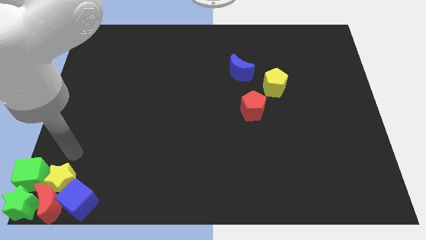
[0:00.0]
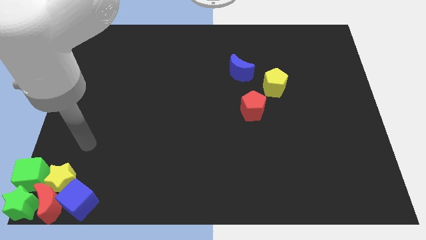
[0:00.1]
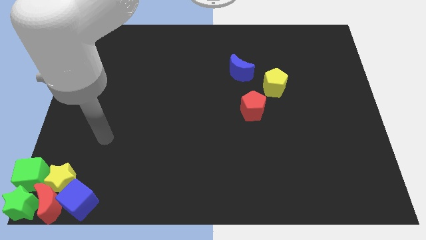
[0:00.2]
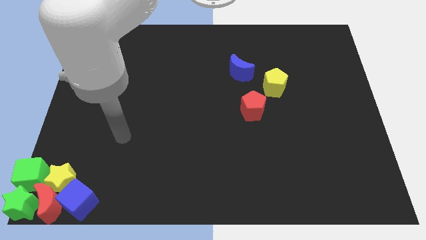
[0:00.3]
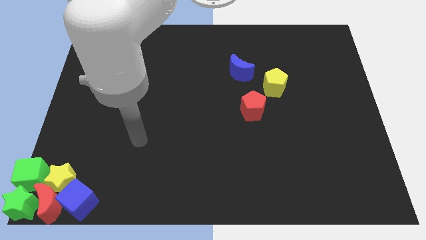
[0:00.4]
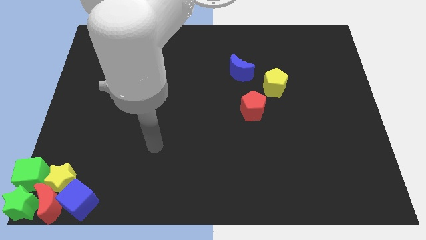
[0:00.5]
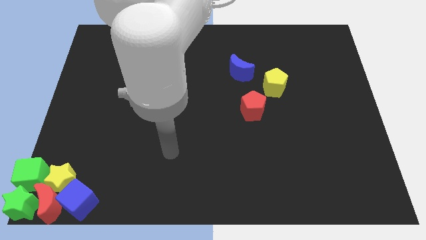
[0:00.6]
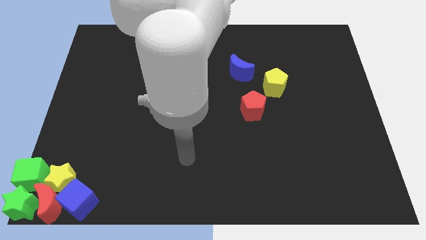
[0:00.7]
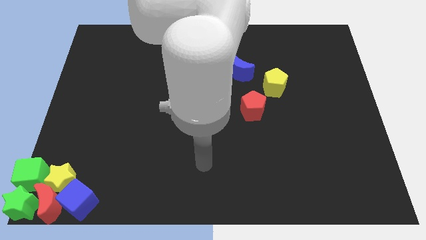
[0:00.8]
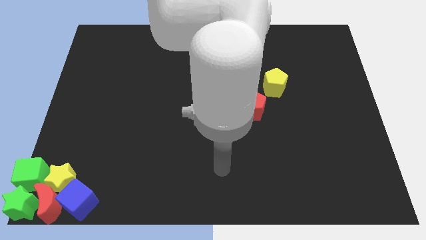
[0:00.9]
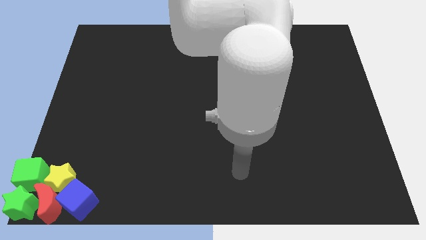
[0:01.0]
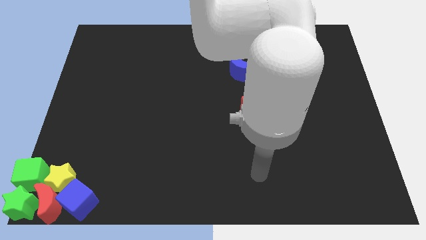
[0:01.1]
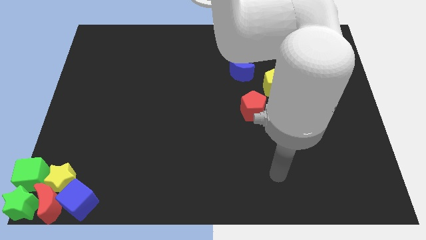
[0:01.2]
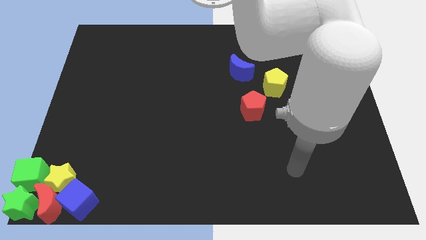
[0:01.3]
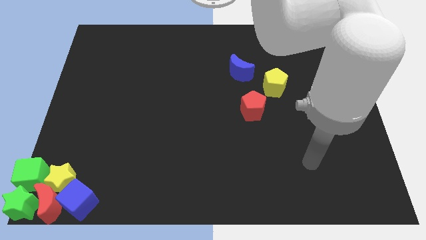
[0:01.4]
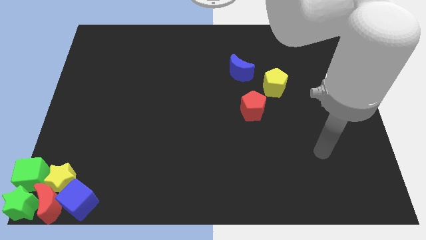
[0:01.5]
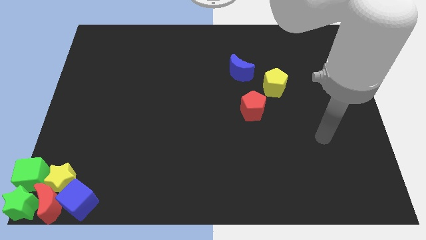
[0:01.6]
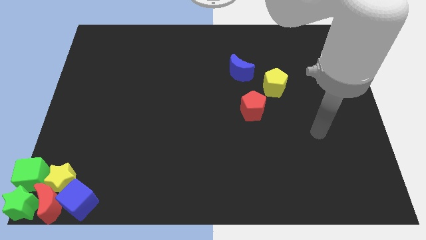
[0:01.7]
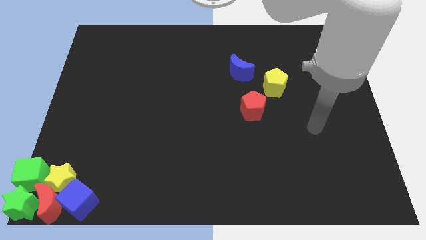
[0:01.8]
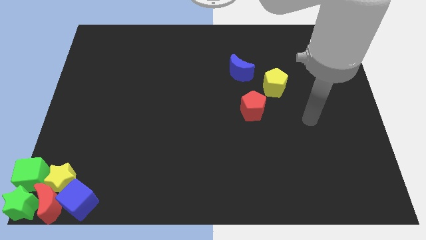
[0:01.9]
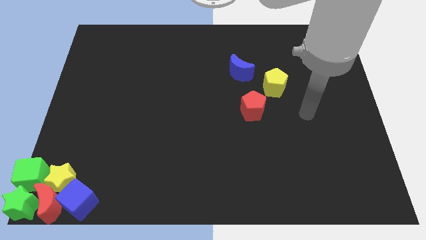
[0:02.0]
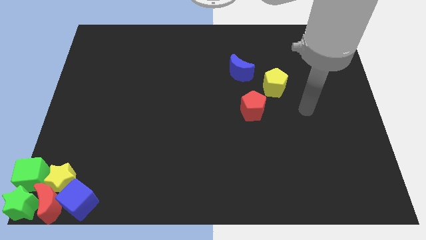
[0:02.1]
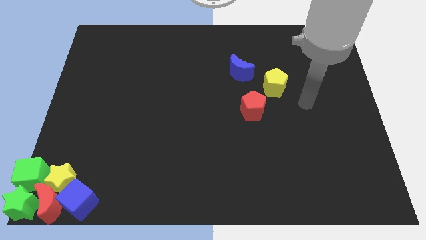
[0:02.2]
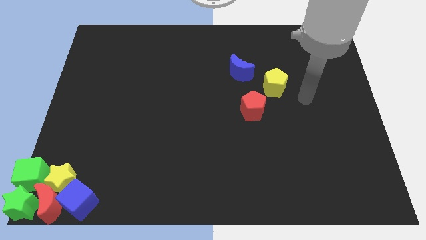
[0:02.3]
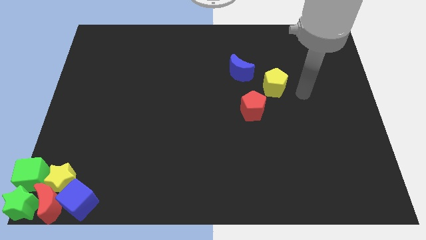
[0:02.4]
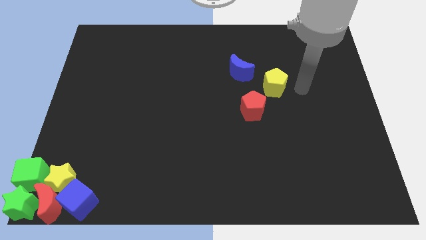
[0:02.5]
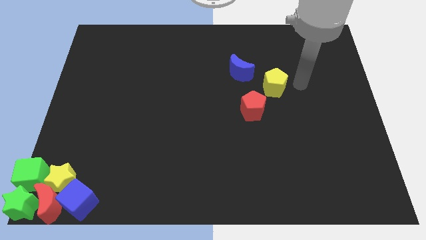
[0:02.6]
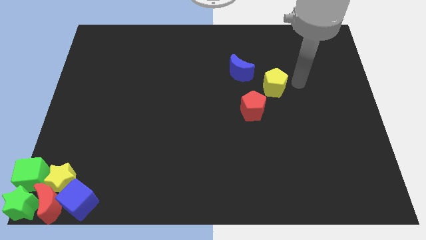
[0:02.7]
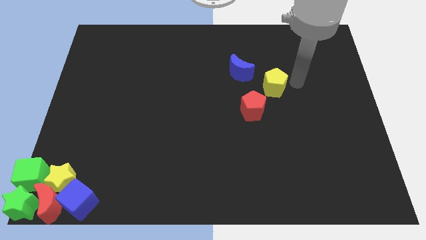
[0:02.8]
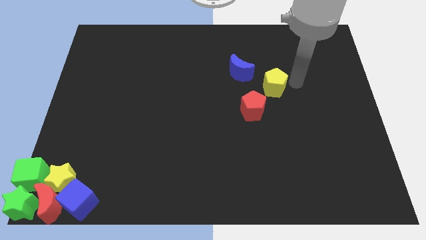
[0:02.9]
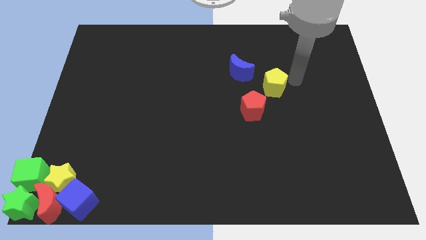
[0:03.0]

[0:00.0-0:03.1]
point your arm at the right of the yellow pentagon

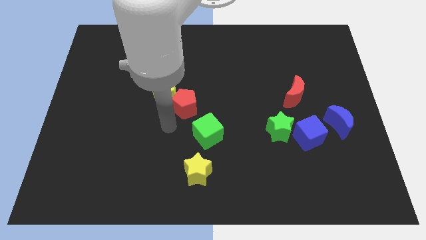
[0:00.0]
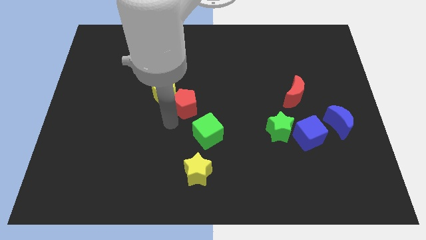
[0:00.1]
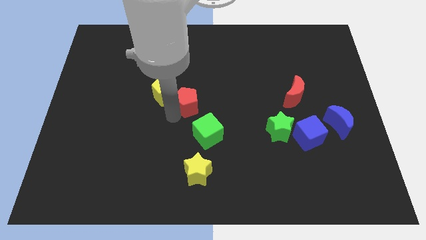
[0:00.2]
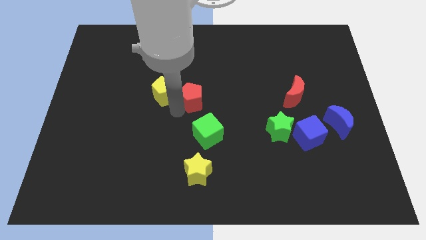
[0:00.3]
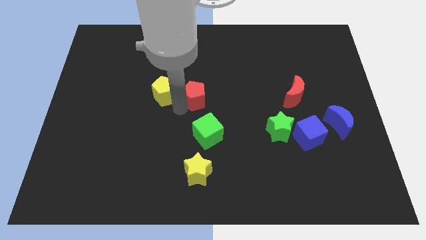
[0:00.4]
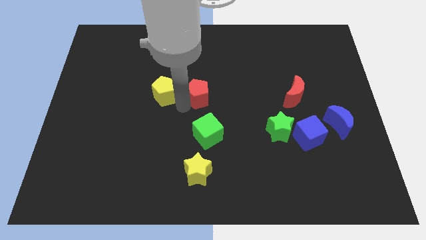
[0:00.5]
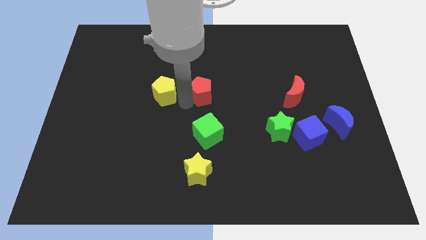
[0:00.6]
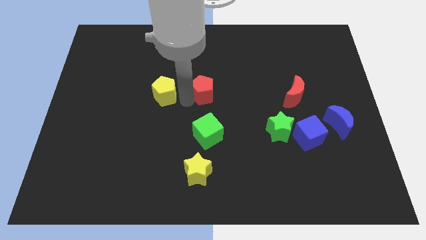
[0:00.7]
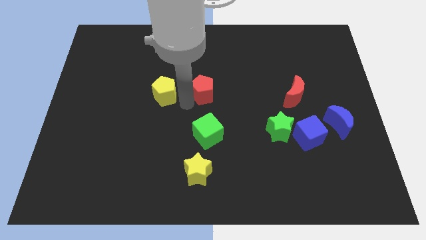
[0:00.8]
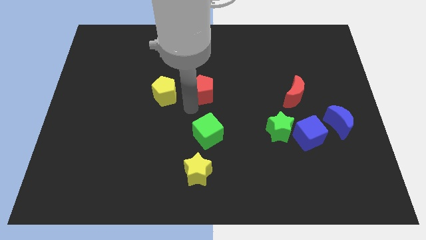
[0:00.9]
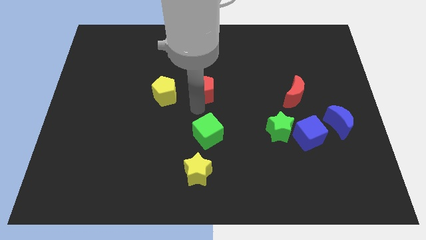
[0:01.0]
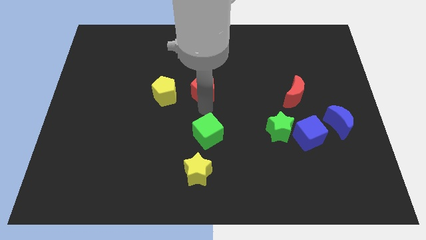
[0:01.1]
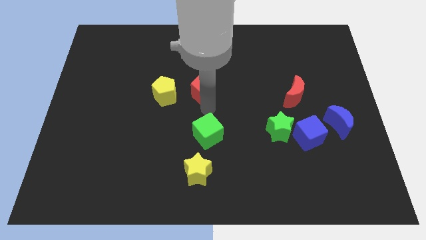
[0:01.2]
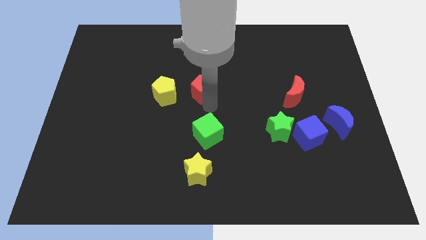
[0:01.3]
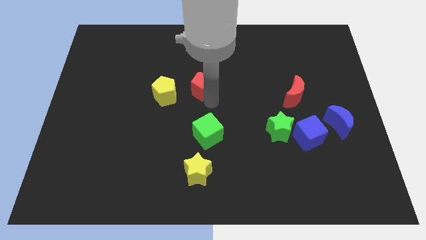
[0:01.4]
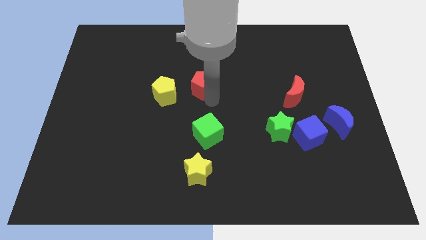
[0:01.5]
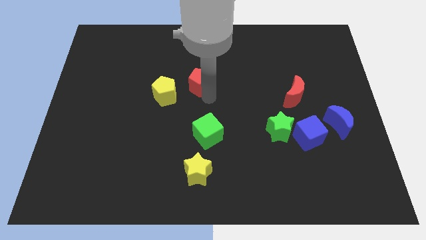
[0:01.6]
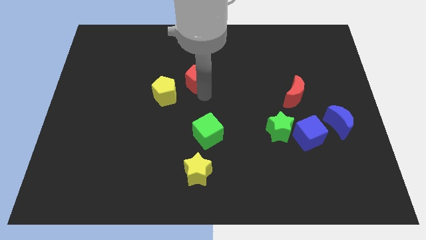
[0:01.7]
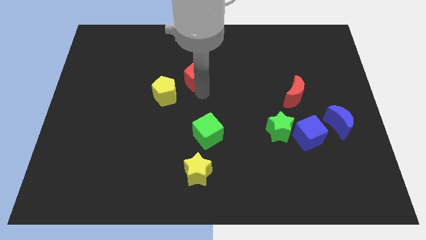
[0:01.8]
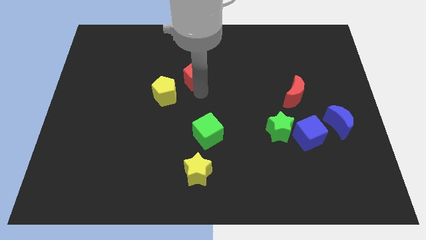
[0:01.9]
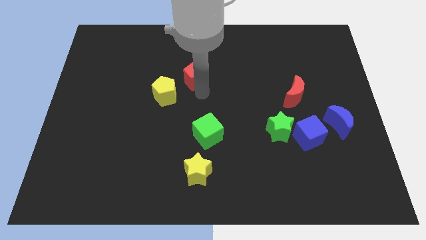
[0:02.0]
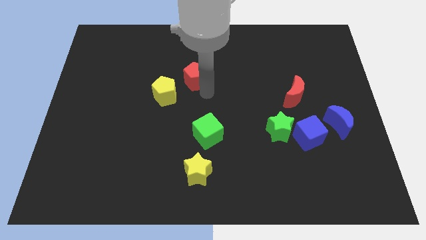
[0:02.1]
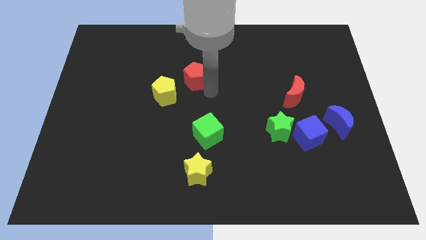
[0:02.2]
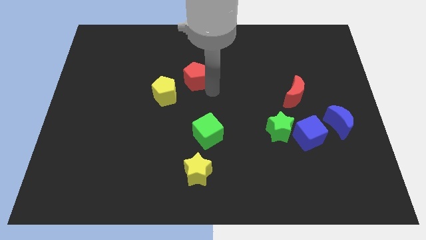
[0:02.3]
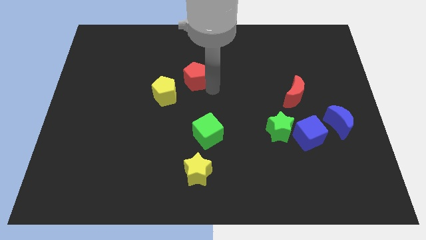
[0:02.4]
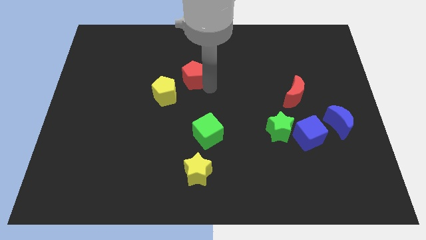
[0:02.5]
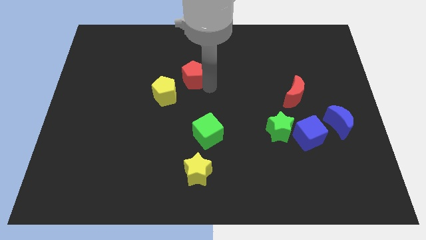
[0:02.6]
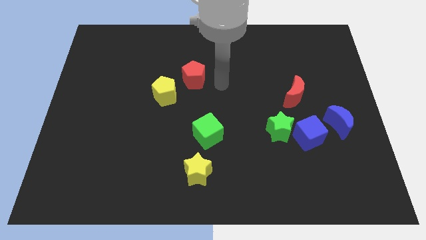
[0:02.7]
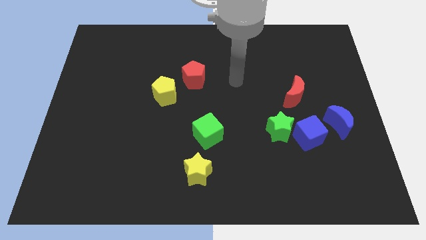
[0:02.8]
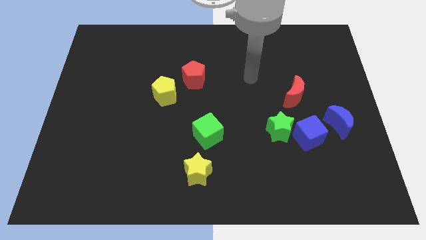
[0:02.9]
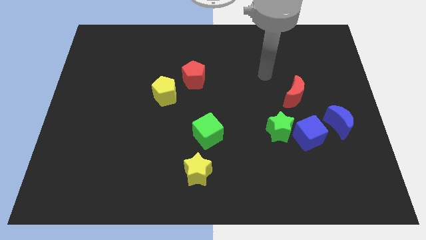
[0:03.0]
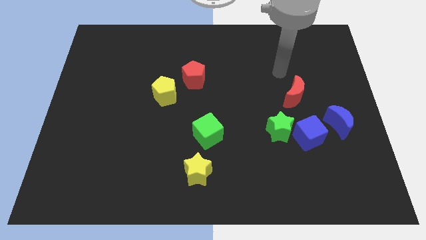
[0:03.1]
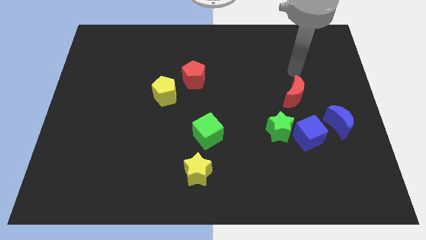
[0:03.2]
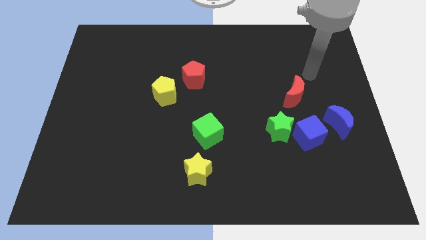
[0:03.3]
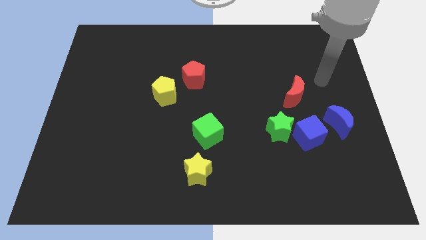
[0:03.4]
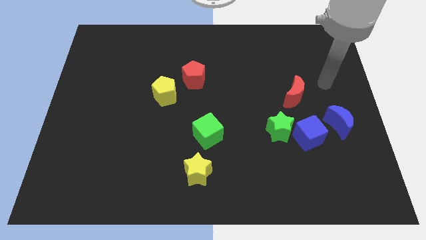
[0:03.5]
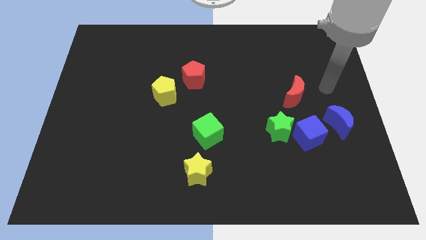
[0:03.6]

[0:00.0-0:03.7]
push red pentagon to the diagonal top right of yellow pentagon

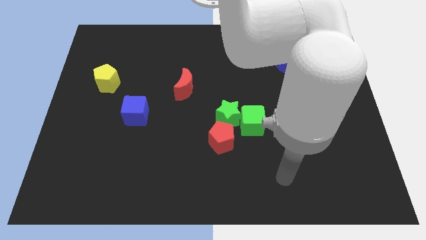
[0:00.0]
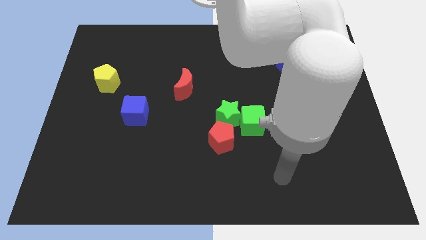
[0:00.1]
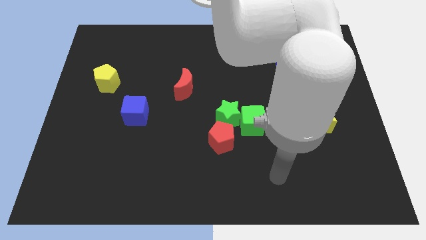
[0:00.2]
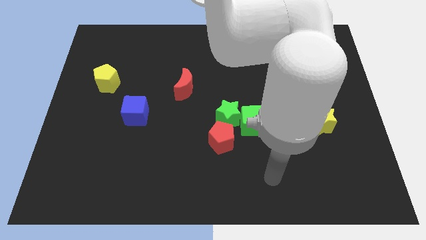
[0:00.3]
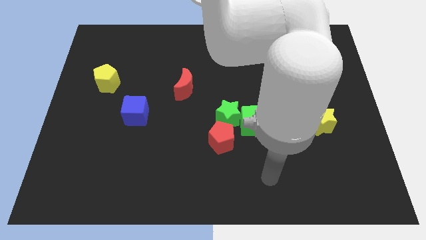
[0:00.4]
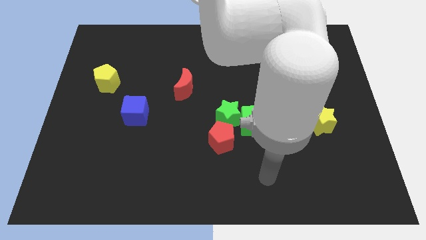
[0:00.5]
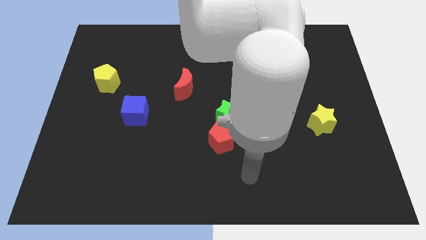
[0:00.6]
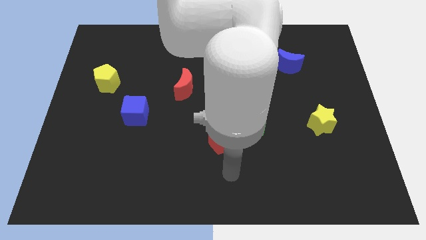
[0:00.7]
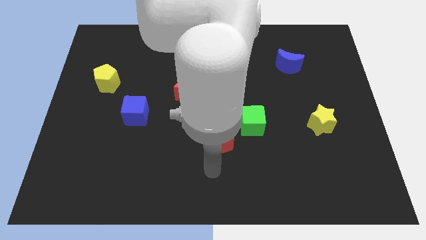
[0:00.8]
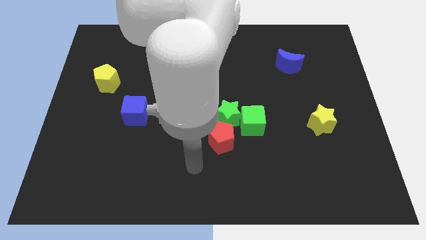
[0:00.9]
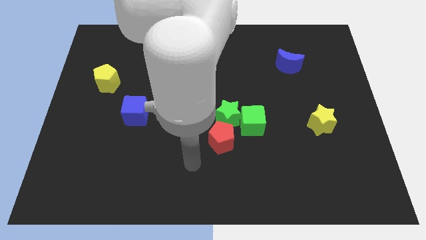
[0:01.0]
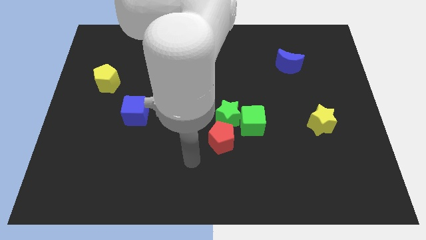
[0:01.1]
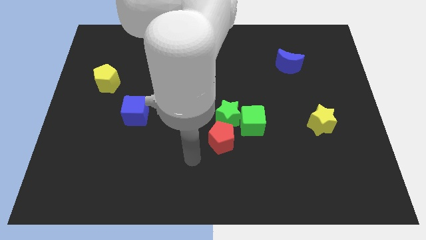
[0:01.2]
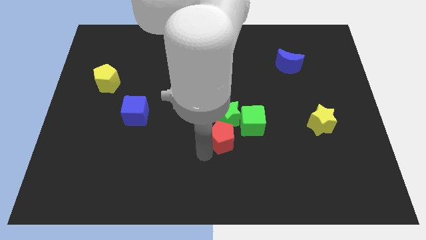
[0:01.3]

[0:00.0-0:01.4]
move your arm to the bottom left of red pentagon

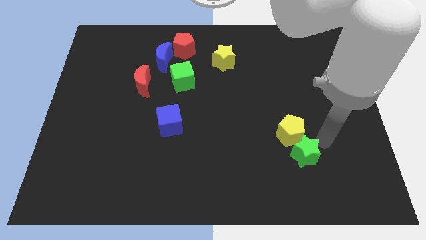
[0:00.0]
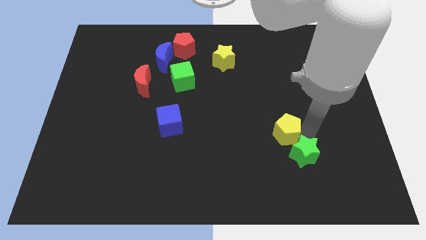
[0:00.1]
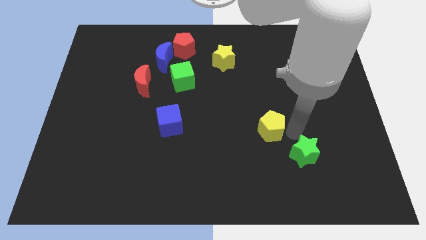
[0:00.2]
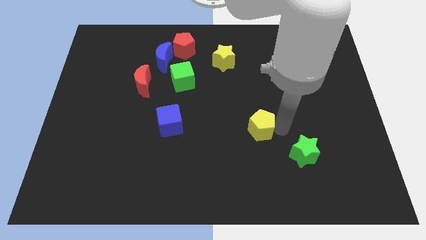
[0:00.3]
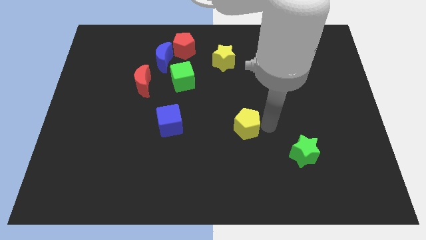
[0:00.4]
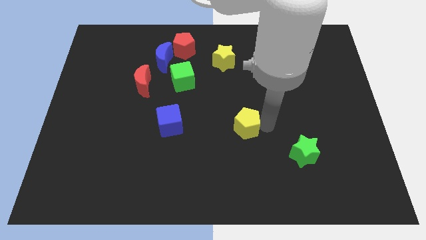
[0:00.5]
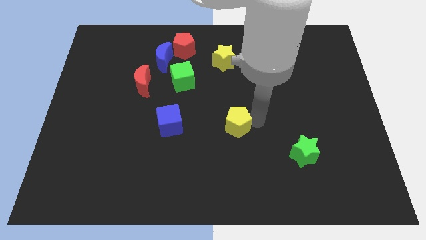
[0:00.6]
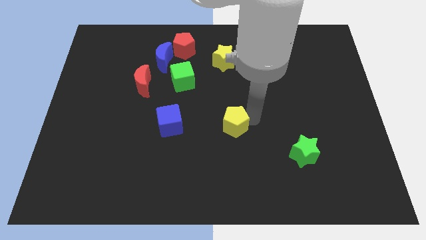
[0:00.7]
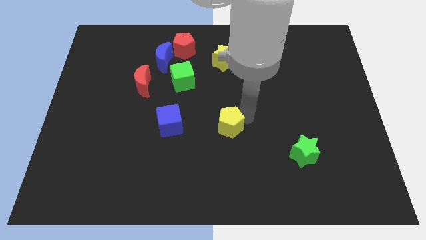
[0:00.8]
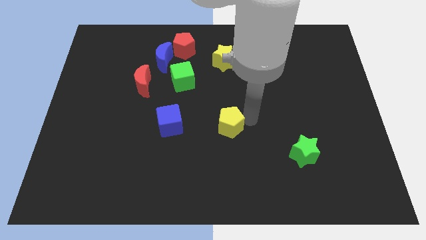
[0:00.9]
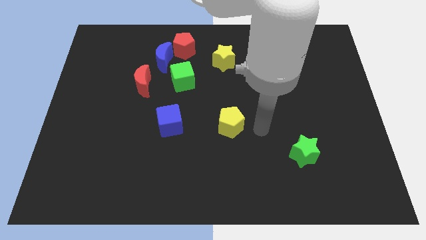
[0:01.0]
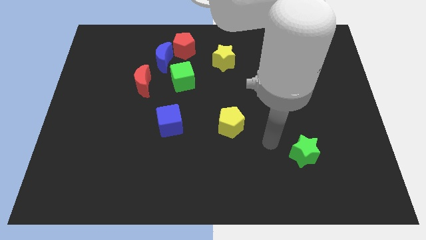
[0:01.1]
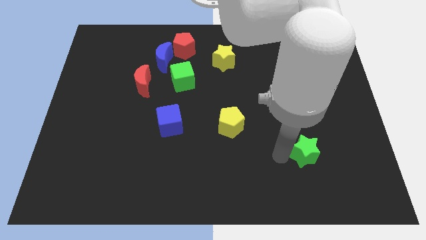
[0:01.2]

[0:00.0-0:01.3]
separate yellow pentagon from the green star
